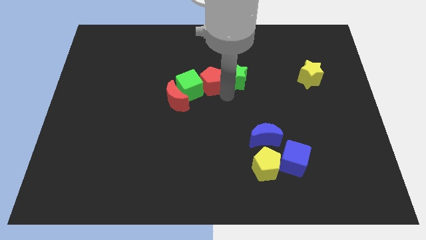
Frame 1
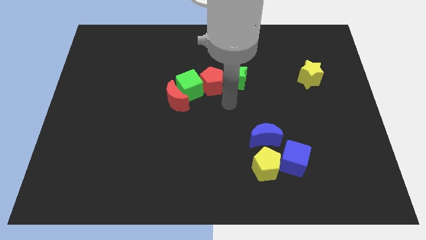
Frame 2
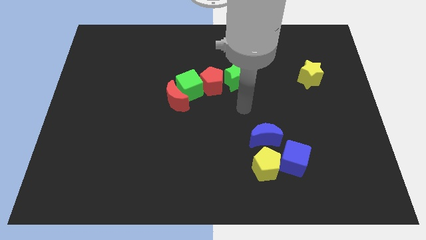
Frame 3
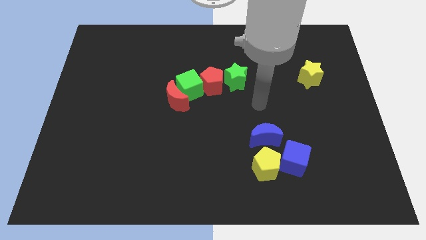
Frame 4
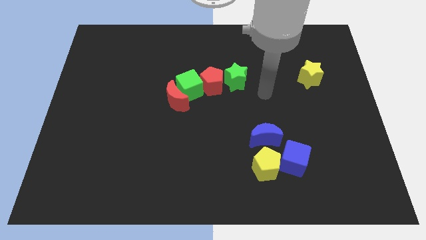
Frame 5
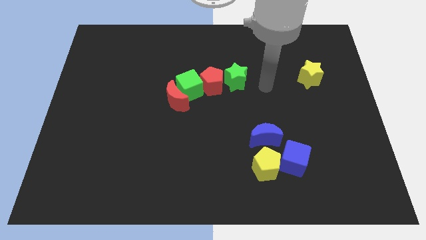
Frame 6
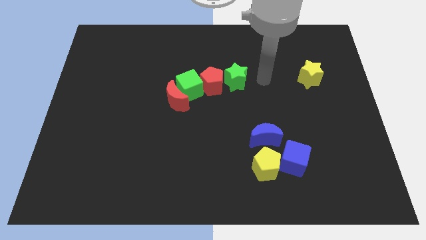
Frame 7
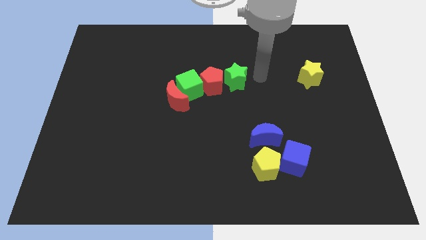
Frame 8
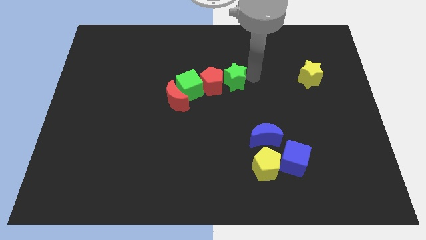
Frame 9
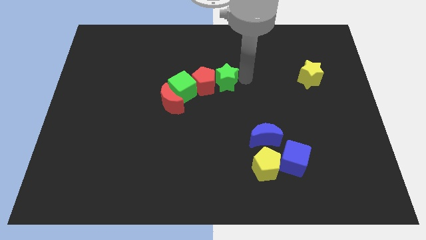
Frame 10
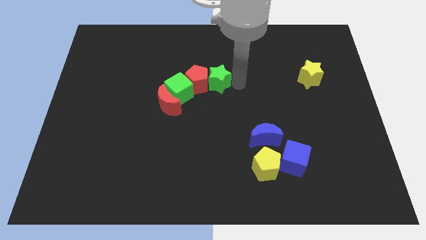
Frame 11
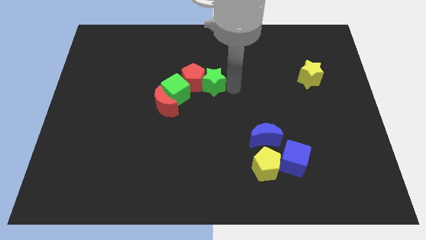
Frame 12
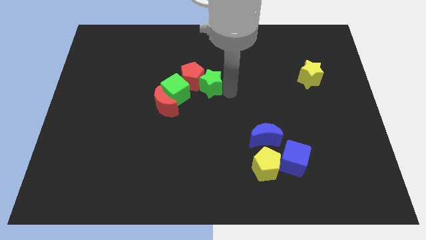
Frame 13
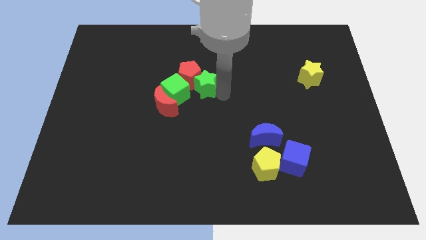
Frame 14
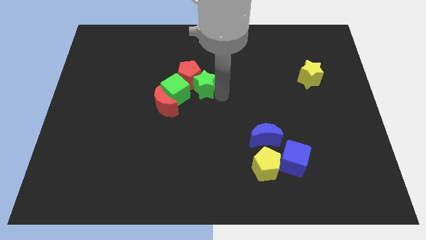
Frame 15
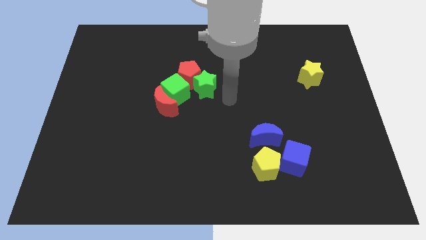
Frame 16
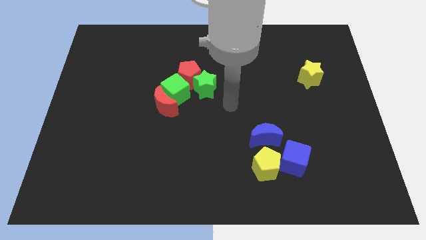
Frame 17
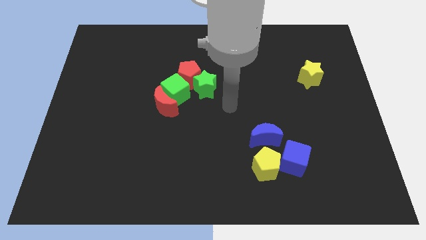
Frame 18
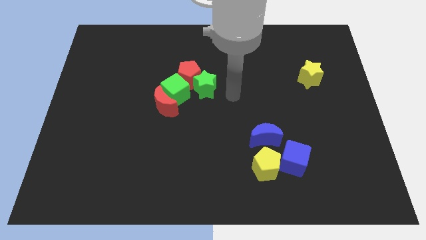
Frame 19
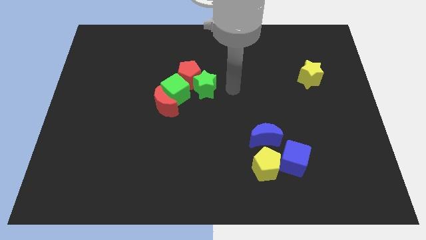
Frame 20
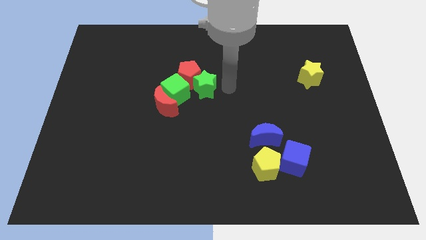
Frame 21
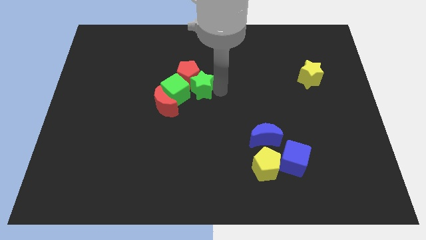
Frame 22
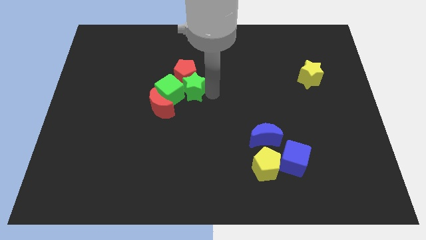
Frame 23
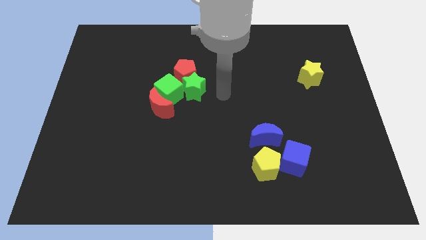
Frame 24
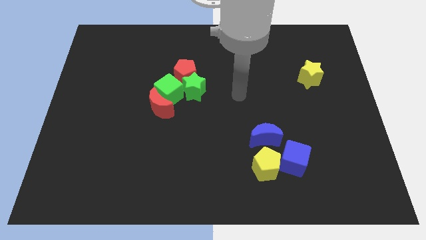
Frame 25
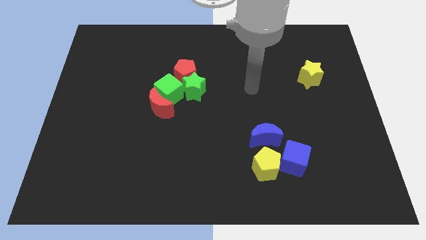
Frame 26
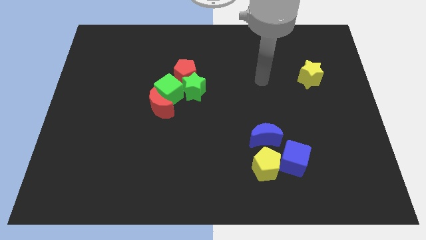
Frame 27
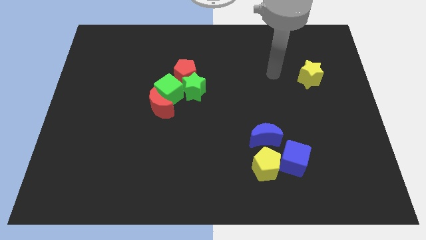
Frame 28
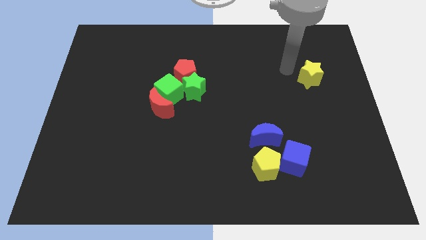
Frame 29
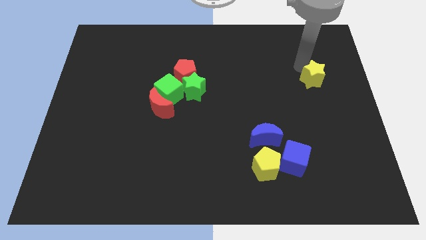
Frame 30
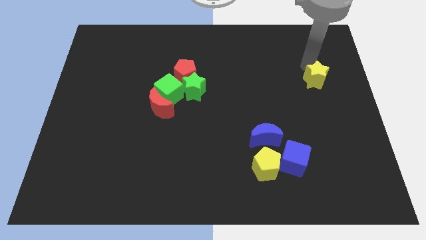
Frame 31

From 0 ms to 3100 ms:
move your arm away from the red pentagon

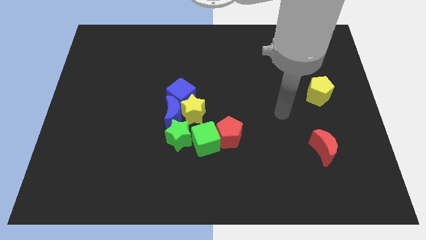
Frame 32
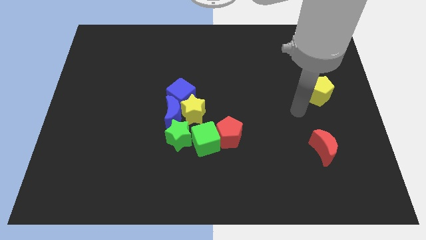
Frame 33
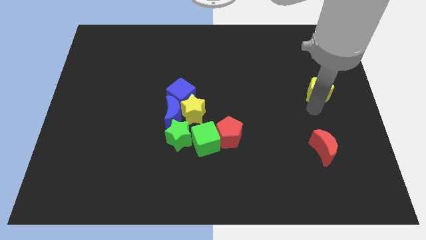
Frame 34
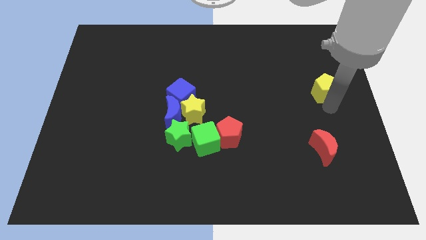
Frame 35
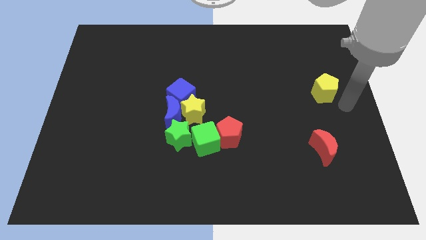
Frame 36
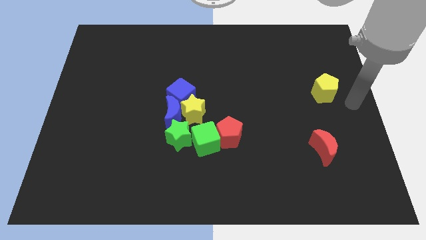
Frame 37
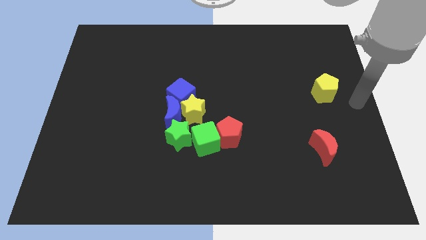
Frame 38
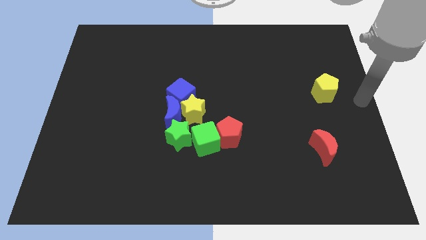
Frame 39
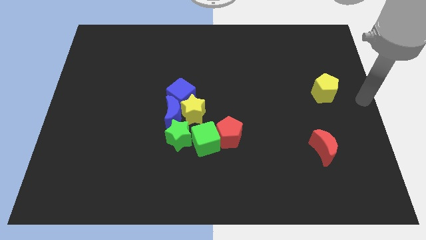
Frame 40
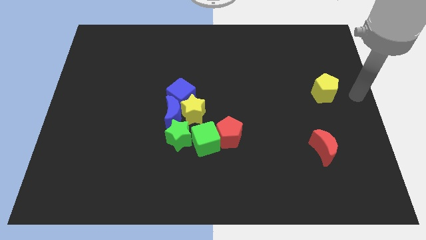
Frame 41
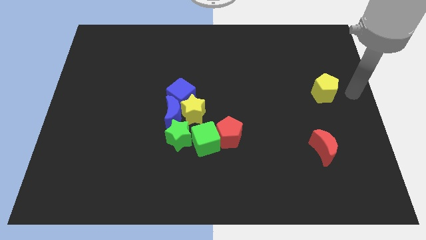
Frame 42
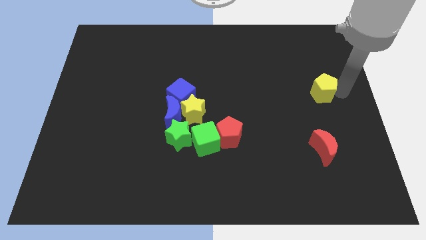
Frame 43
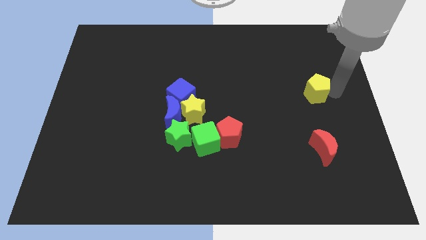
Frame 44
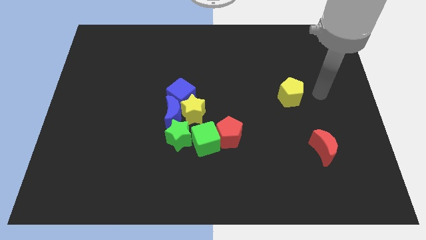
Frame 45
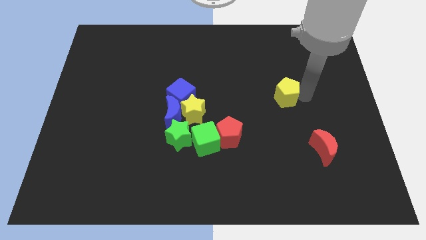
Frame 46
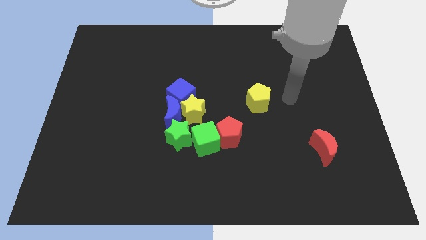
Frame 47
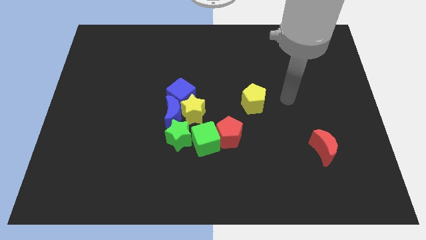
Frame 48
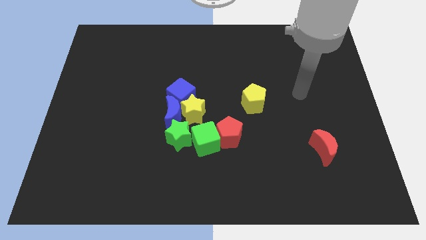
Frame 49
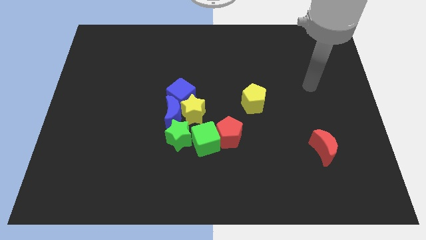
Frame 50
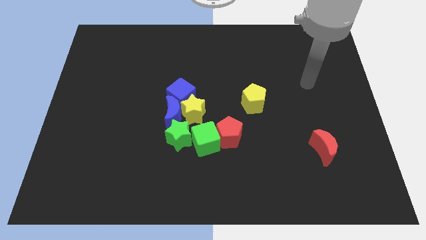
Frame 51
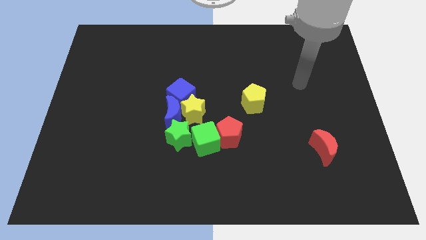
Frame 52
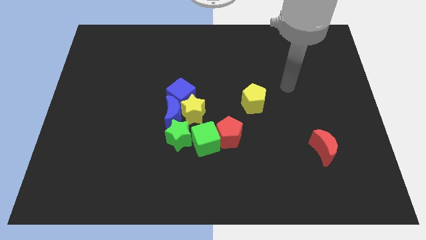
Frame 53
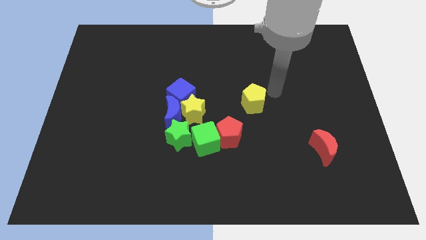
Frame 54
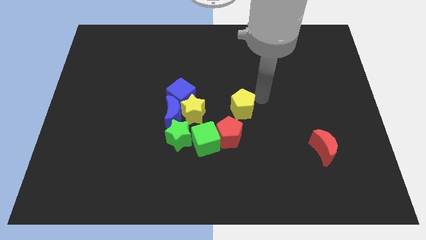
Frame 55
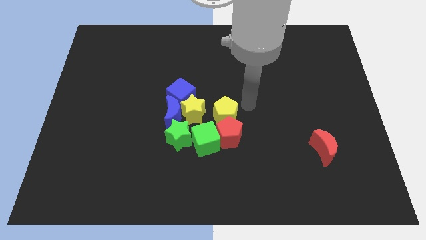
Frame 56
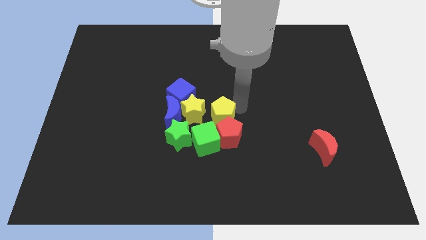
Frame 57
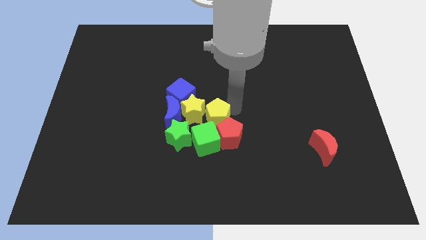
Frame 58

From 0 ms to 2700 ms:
place yellow pentagon above red pentagon

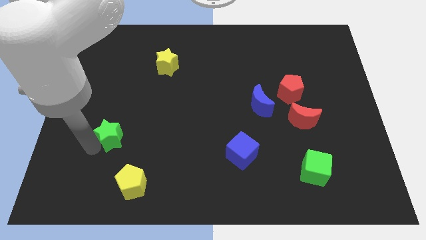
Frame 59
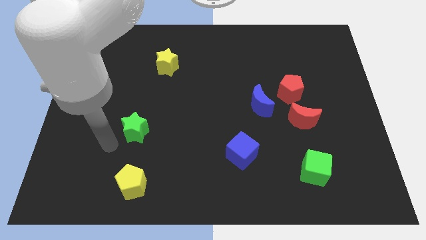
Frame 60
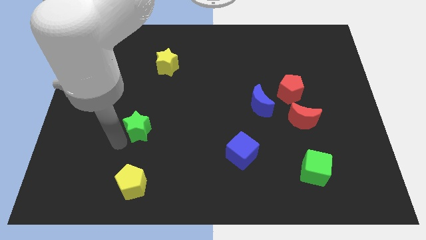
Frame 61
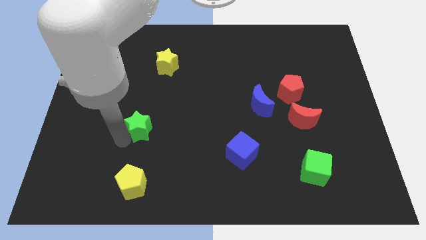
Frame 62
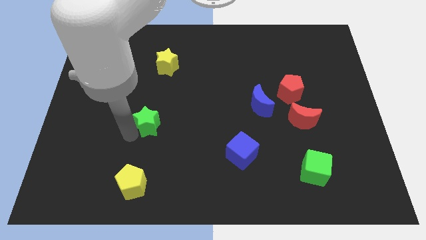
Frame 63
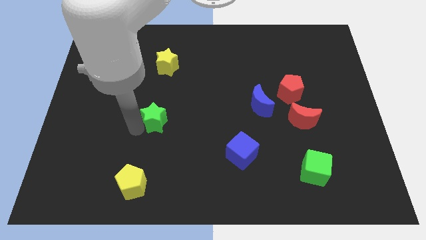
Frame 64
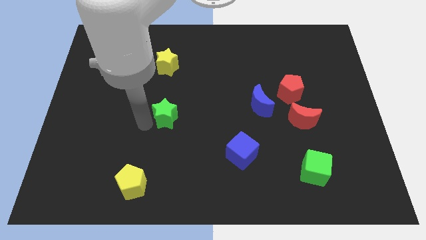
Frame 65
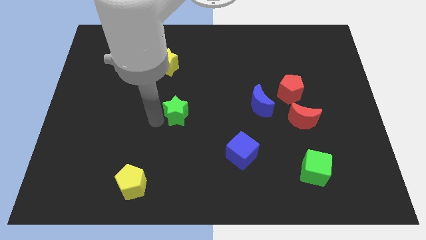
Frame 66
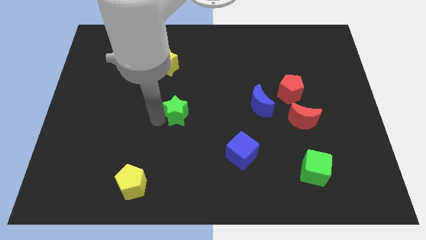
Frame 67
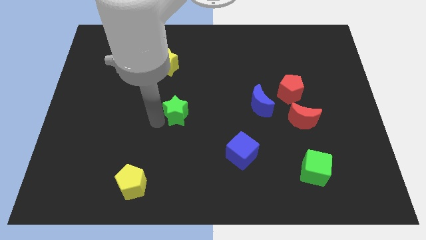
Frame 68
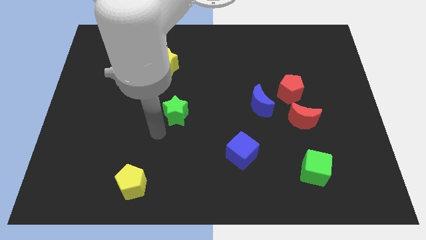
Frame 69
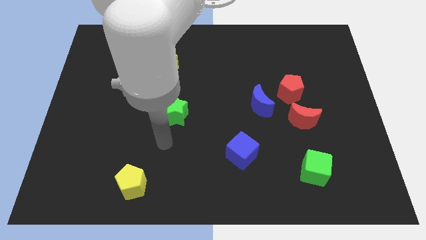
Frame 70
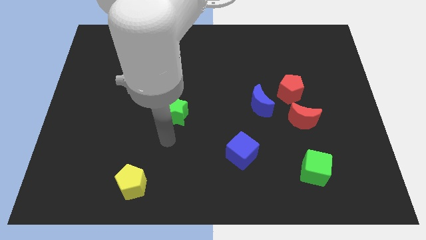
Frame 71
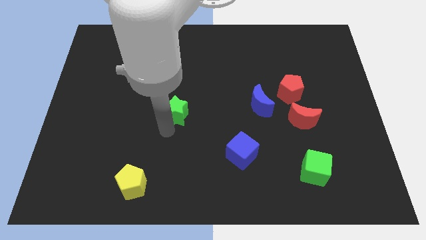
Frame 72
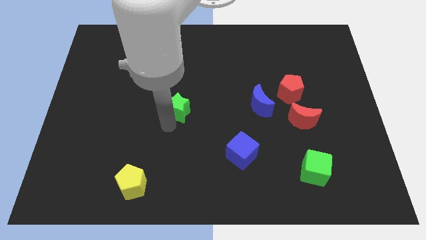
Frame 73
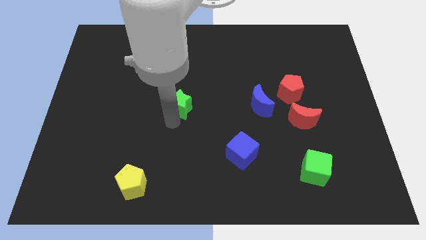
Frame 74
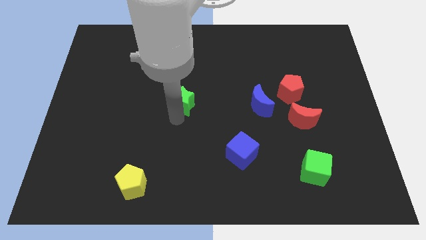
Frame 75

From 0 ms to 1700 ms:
place the green star at the center of the board

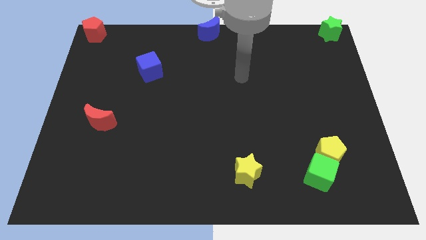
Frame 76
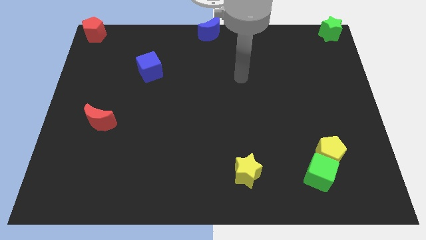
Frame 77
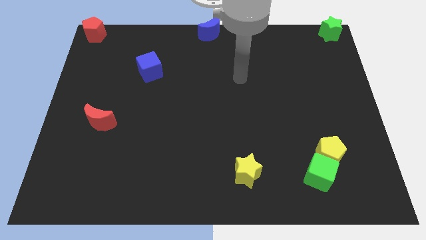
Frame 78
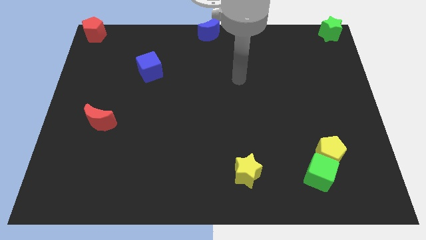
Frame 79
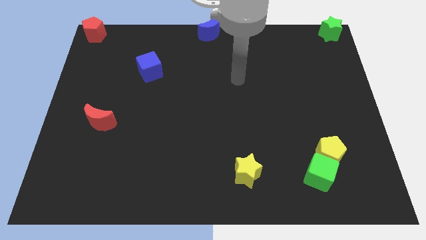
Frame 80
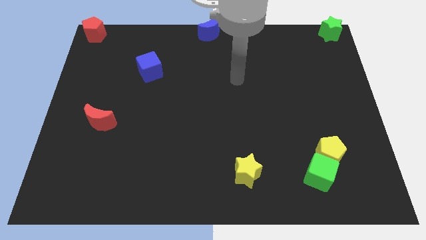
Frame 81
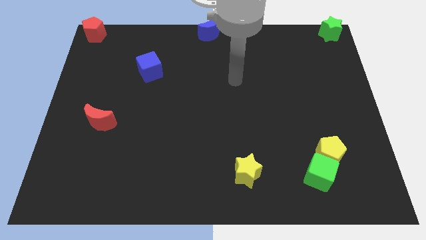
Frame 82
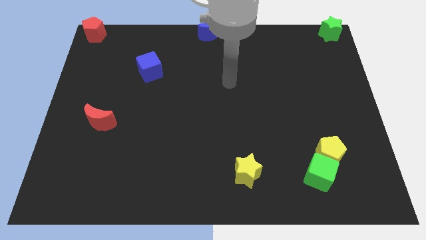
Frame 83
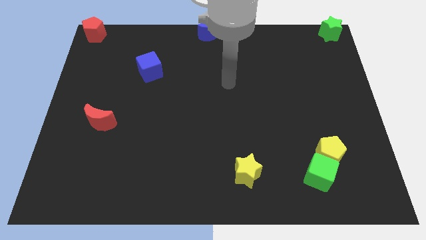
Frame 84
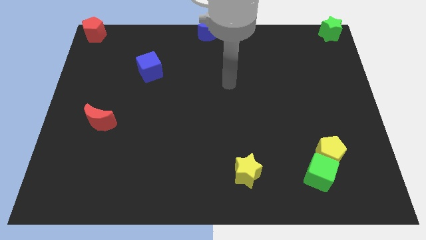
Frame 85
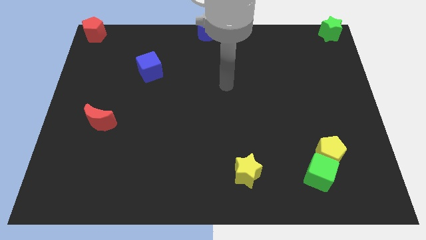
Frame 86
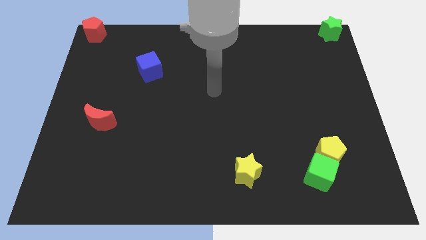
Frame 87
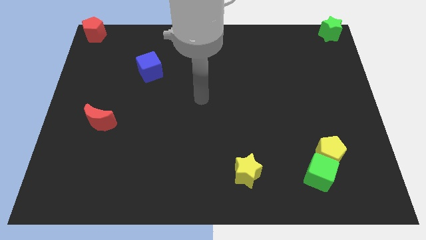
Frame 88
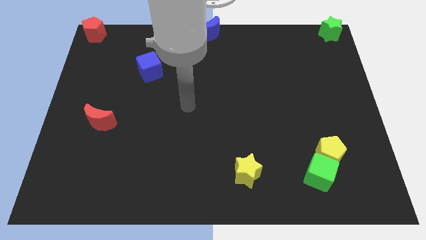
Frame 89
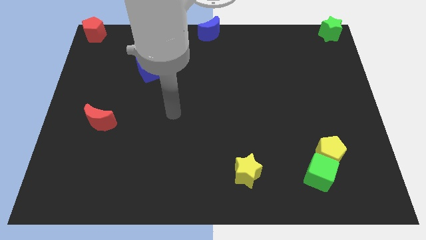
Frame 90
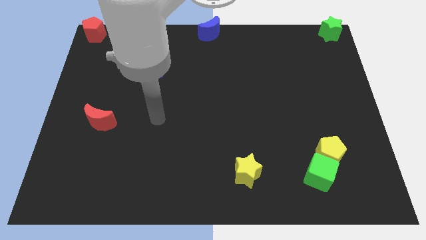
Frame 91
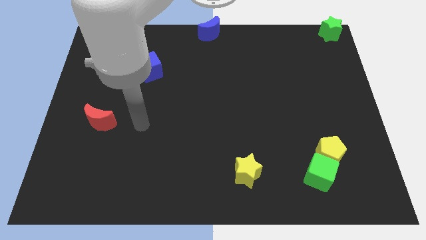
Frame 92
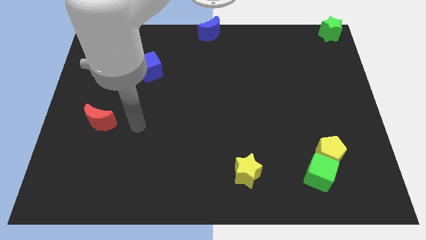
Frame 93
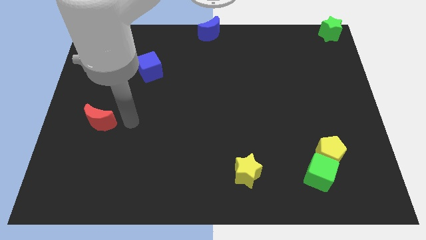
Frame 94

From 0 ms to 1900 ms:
place your arm to the right of the red moon
